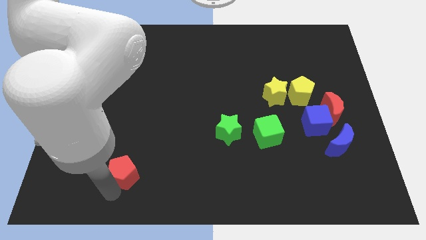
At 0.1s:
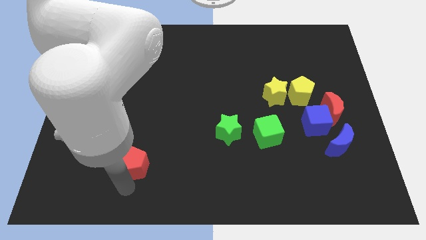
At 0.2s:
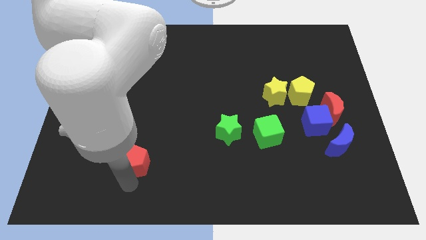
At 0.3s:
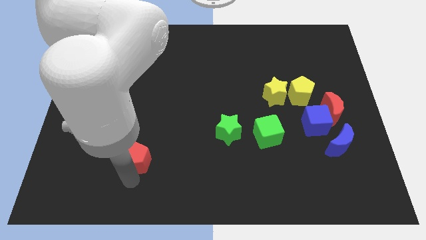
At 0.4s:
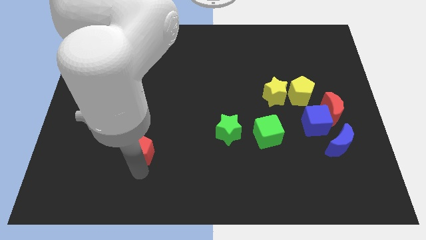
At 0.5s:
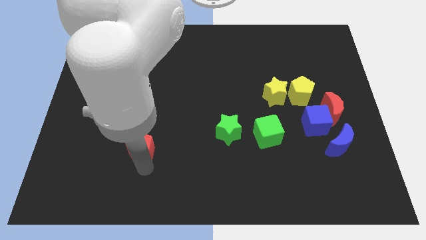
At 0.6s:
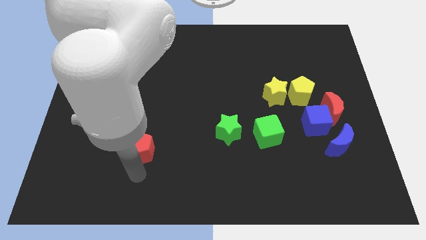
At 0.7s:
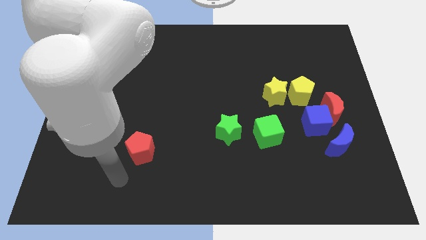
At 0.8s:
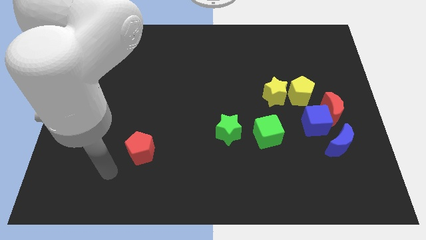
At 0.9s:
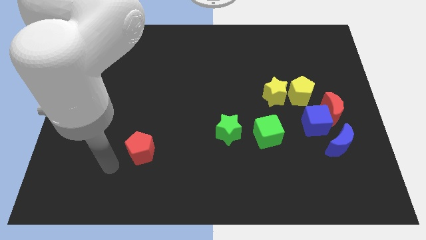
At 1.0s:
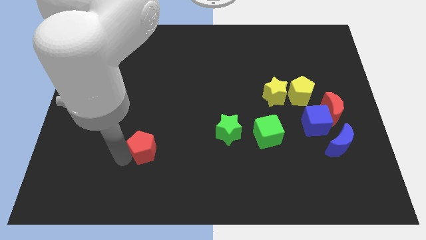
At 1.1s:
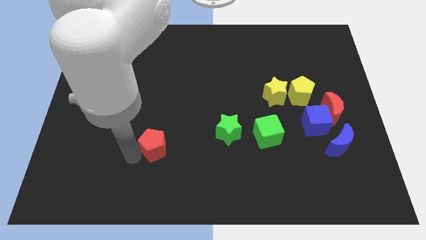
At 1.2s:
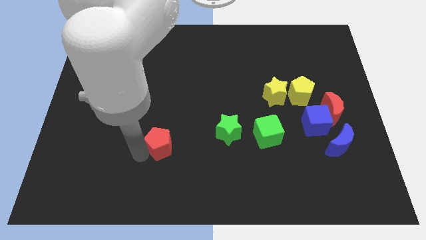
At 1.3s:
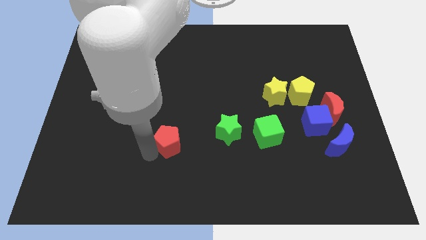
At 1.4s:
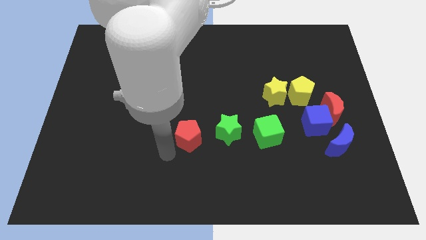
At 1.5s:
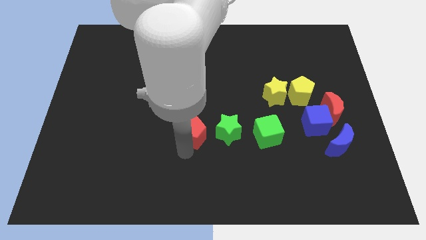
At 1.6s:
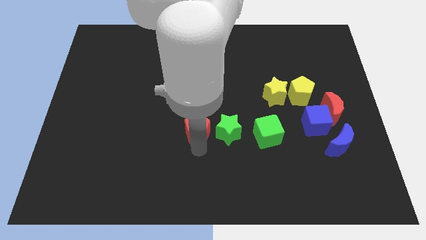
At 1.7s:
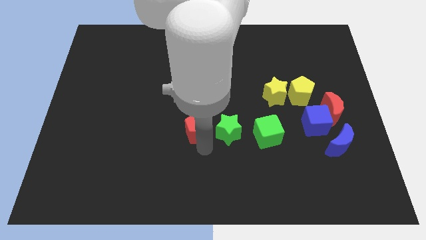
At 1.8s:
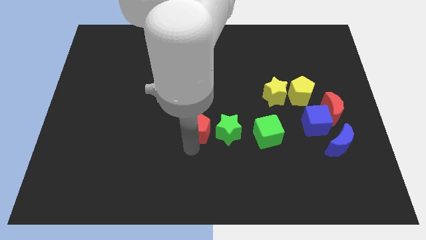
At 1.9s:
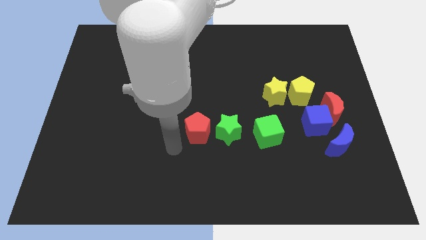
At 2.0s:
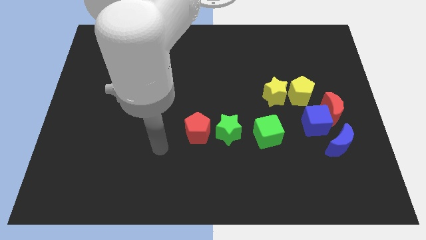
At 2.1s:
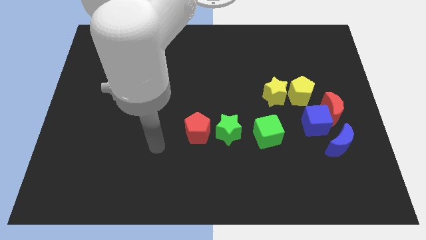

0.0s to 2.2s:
push red pentagon towards green star

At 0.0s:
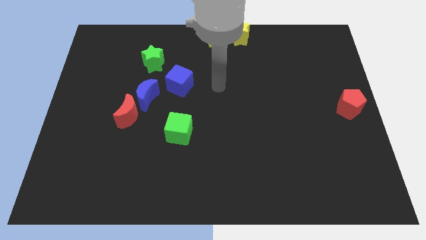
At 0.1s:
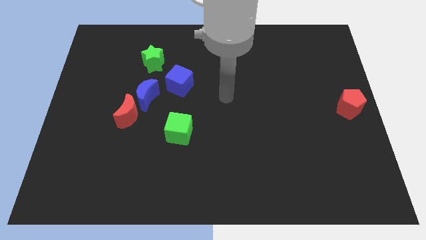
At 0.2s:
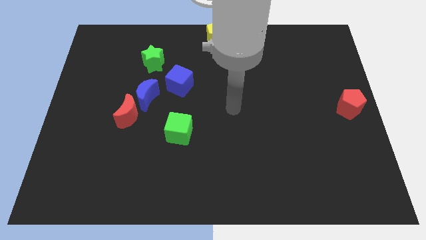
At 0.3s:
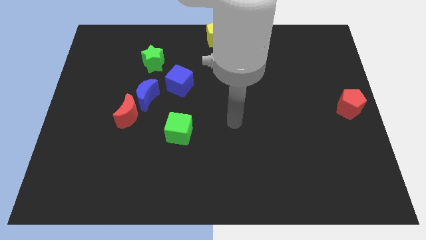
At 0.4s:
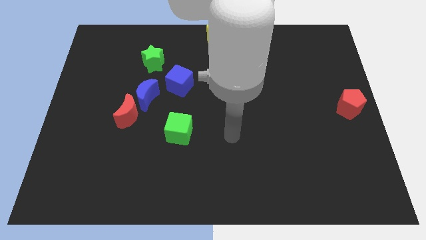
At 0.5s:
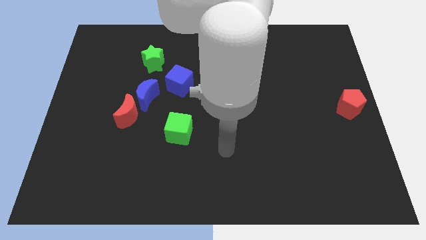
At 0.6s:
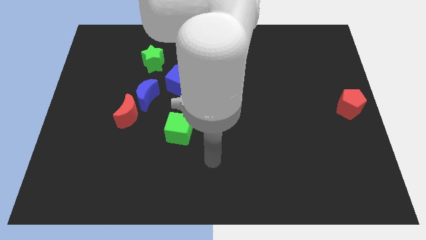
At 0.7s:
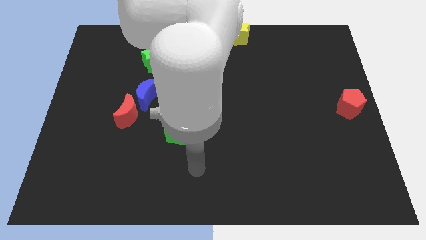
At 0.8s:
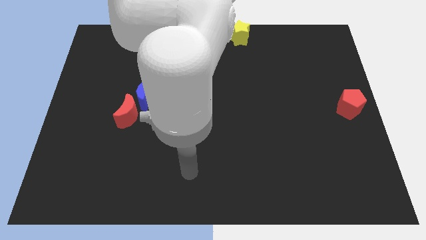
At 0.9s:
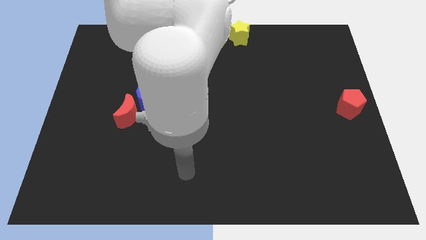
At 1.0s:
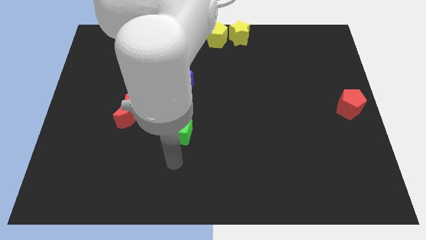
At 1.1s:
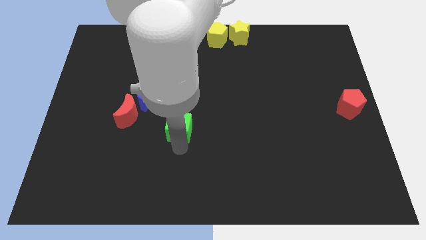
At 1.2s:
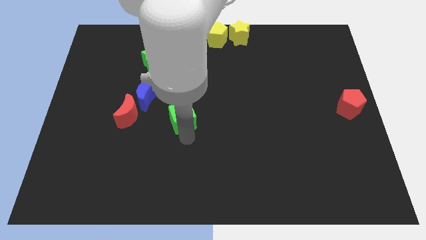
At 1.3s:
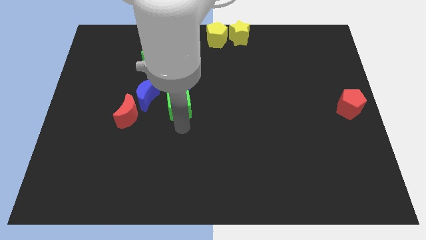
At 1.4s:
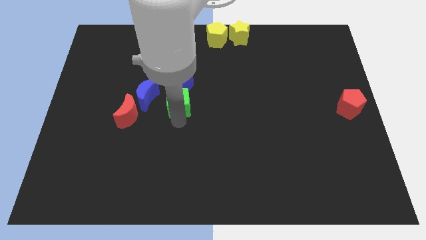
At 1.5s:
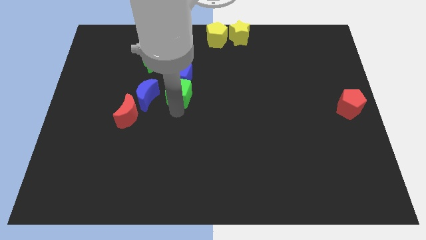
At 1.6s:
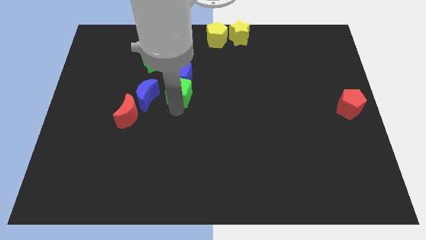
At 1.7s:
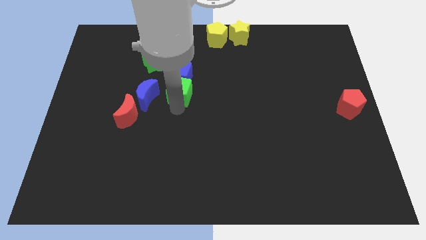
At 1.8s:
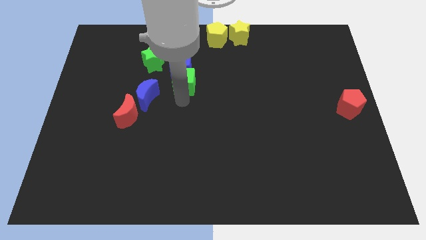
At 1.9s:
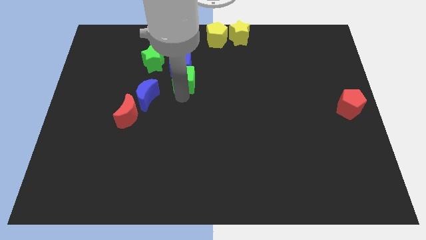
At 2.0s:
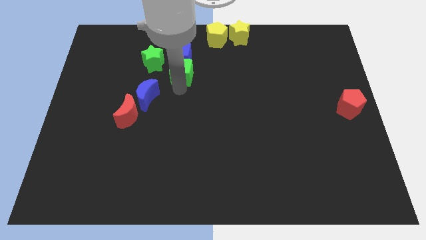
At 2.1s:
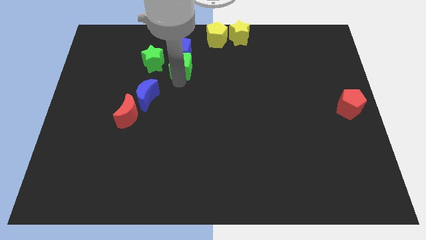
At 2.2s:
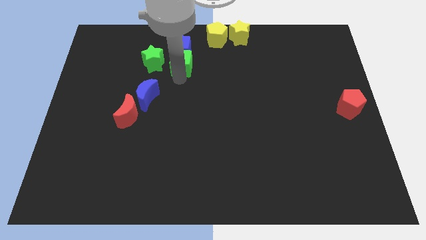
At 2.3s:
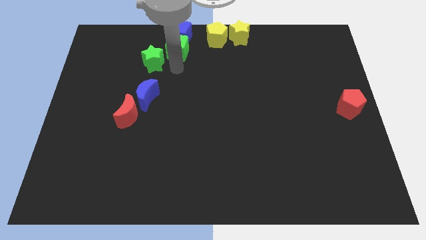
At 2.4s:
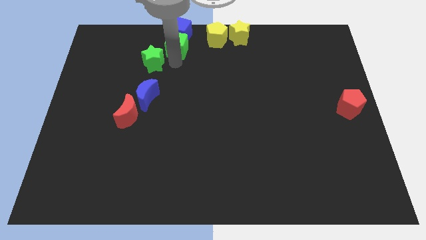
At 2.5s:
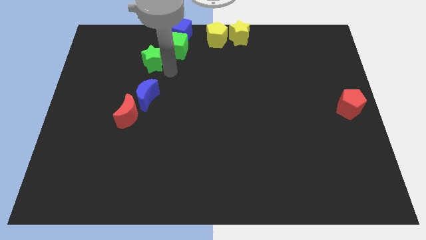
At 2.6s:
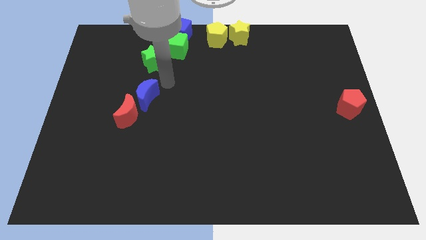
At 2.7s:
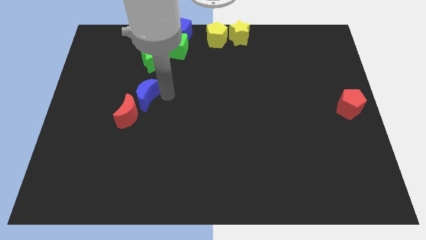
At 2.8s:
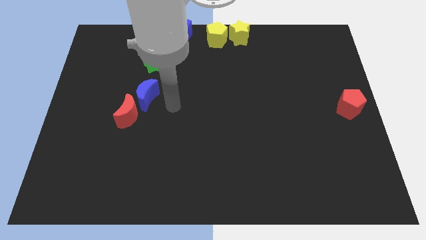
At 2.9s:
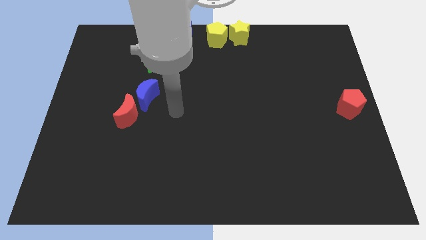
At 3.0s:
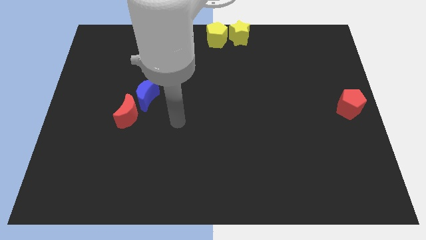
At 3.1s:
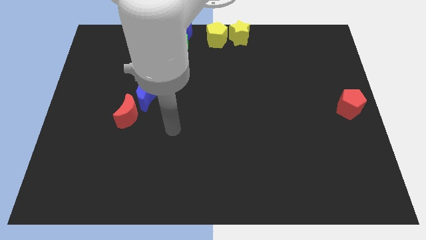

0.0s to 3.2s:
slide the blue cube and the green cube towards top

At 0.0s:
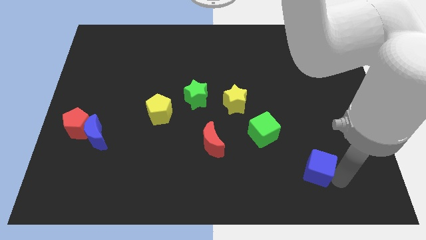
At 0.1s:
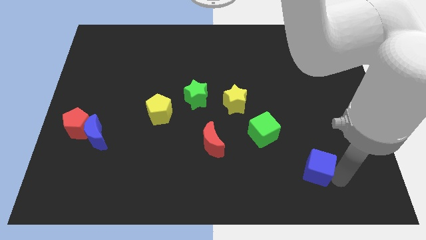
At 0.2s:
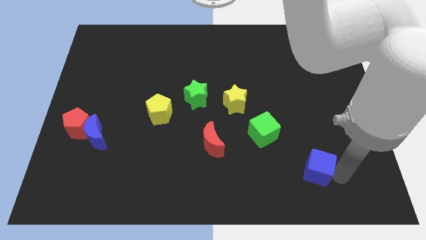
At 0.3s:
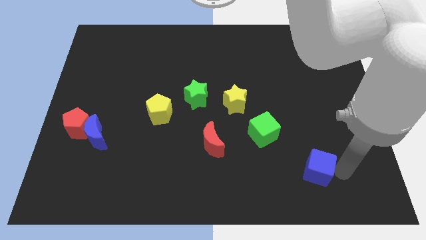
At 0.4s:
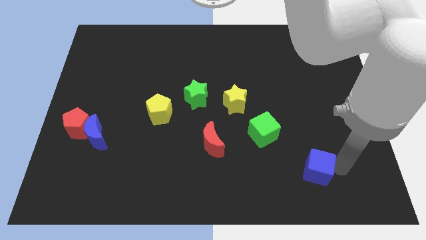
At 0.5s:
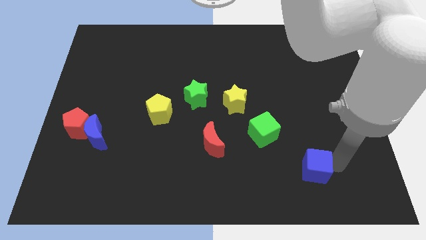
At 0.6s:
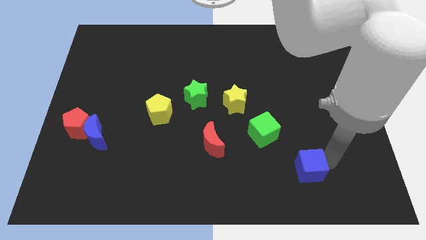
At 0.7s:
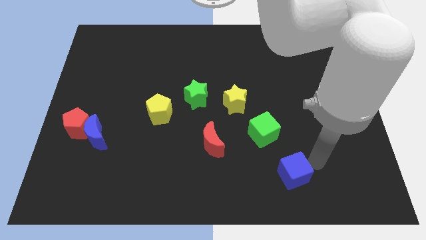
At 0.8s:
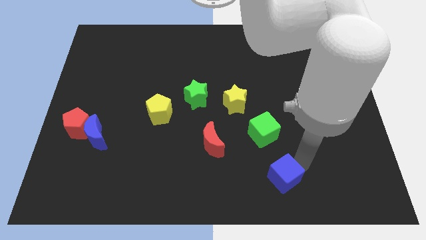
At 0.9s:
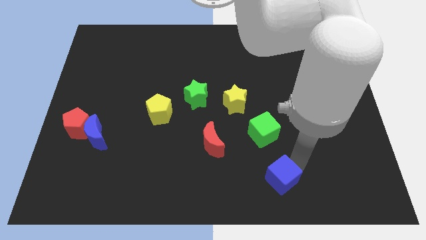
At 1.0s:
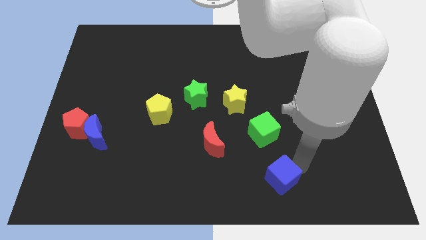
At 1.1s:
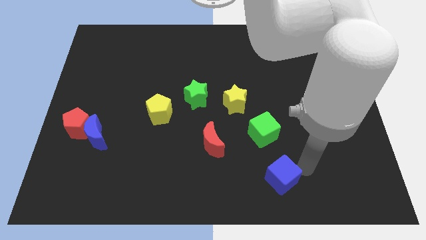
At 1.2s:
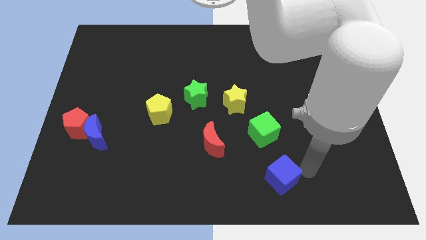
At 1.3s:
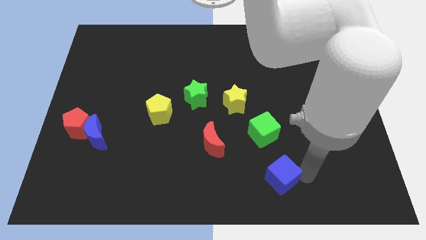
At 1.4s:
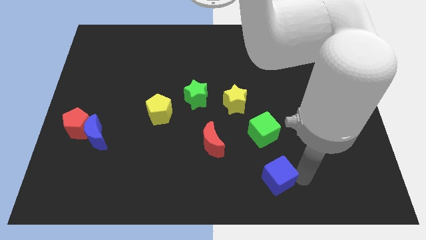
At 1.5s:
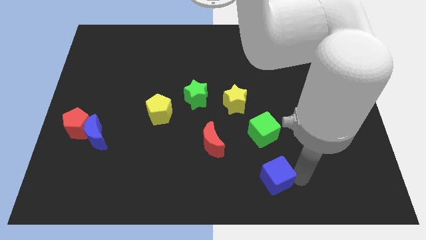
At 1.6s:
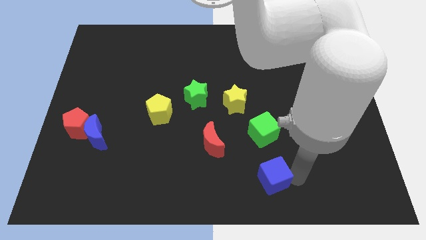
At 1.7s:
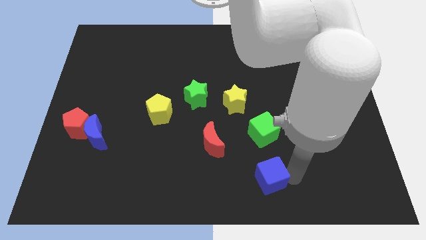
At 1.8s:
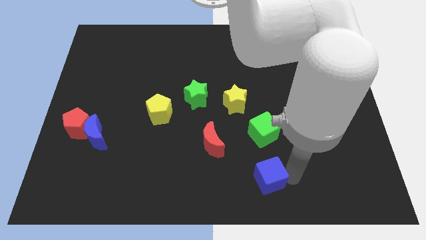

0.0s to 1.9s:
place the blue cube below the green cube

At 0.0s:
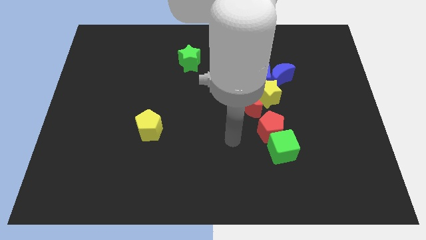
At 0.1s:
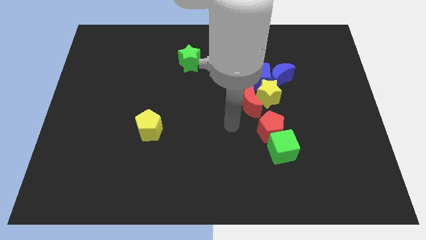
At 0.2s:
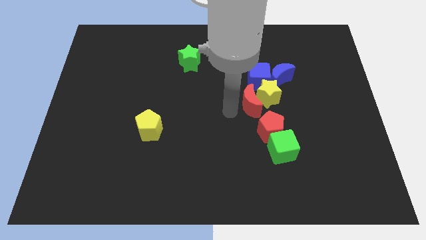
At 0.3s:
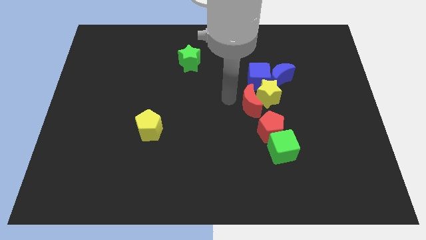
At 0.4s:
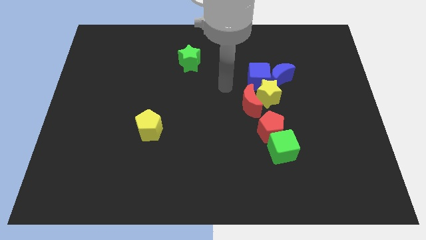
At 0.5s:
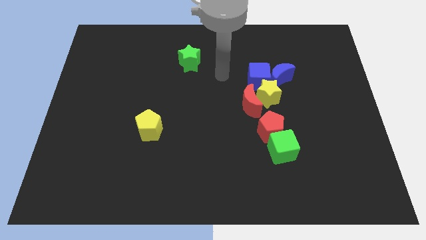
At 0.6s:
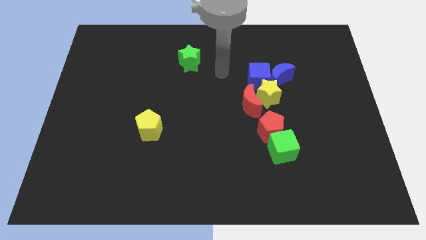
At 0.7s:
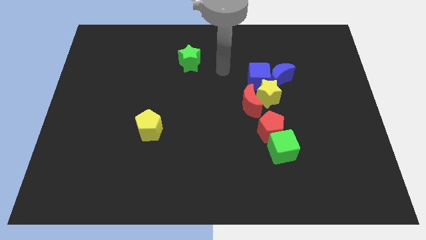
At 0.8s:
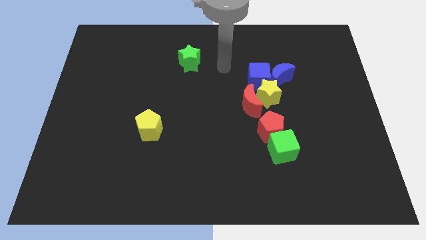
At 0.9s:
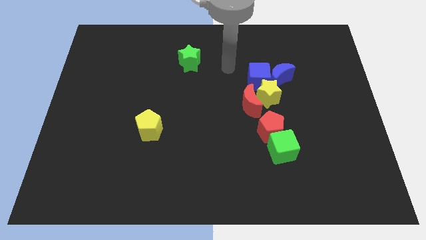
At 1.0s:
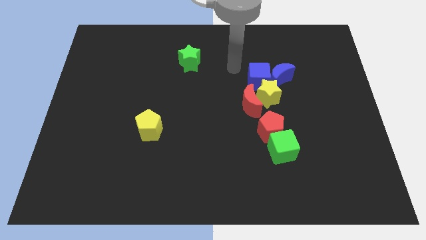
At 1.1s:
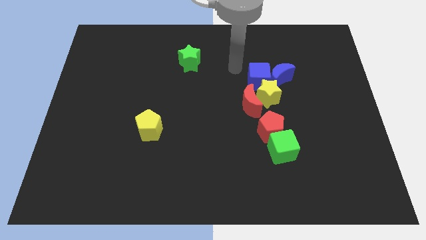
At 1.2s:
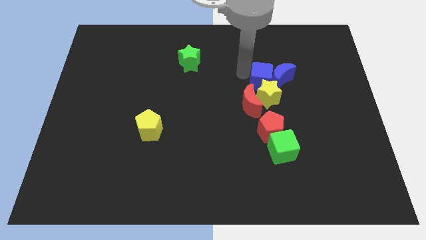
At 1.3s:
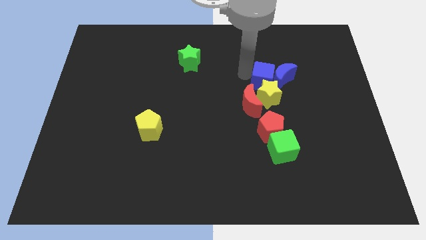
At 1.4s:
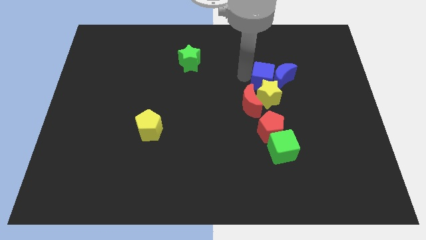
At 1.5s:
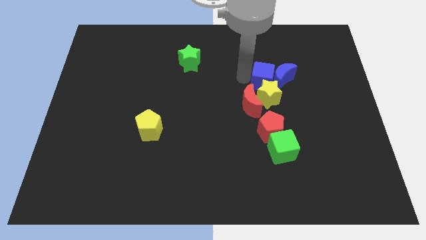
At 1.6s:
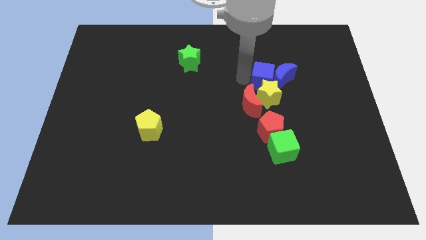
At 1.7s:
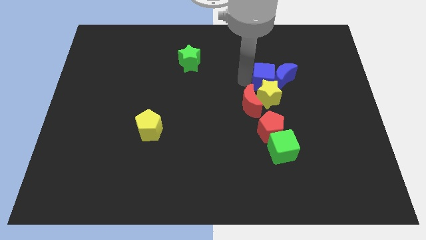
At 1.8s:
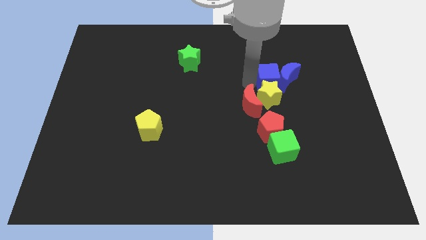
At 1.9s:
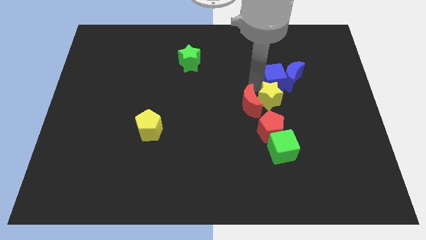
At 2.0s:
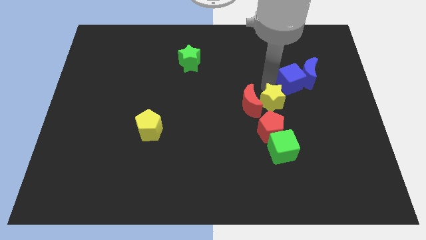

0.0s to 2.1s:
move the blue cube into the yellow star
